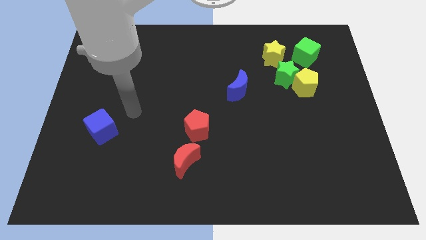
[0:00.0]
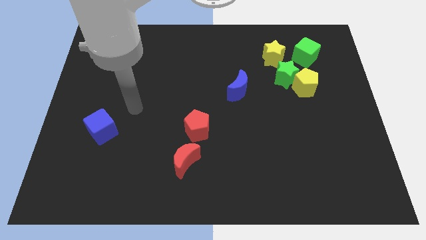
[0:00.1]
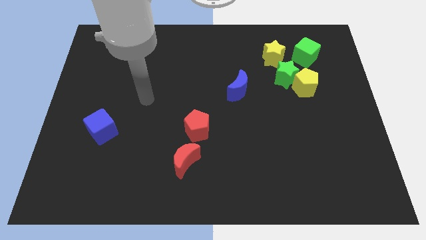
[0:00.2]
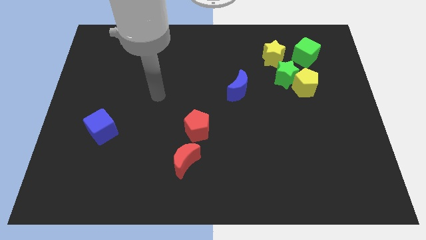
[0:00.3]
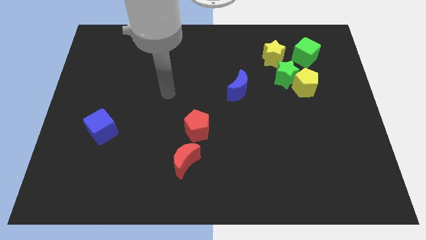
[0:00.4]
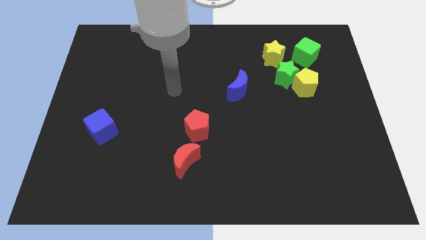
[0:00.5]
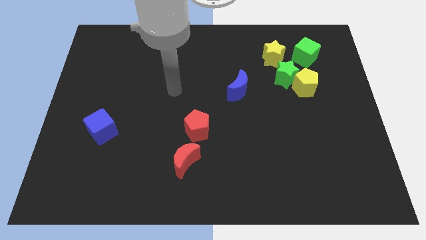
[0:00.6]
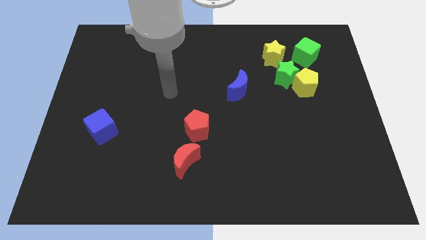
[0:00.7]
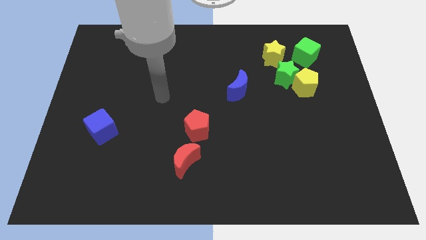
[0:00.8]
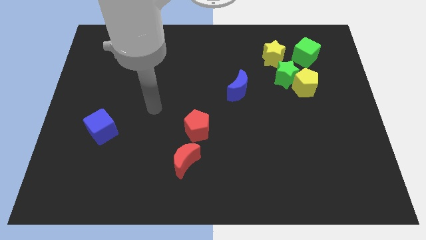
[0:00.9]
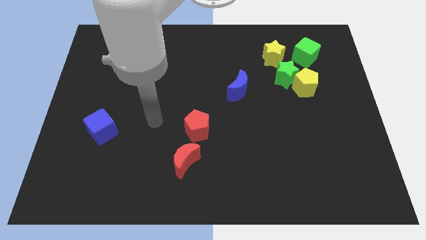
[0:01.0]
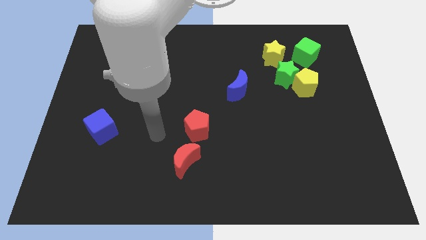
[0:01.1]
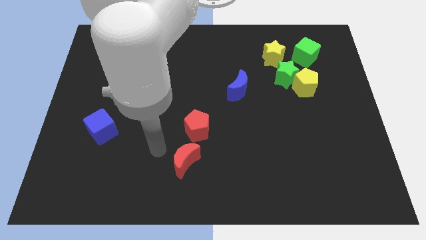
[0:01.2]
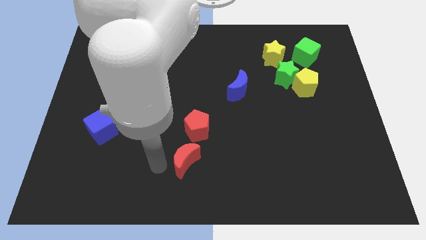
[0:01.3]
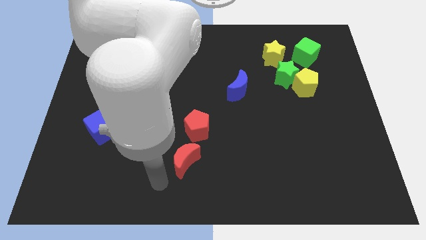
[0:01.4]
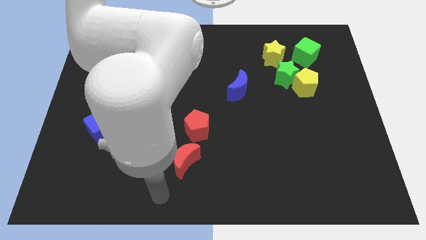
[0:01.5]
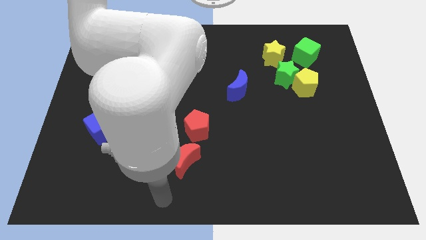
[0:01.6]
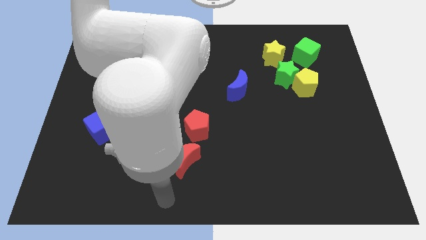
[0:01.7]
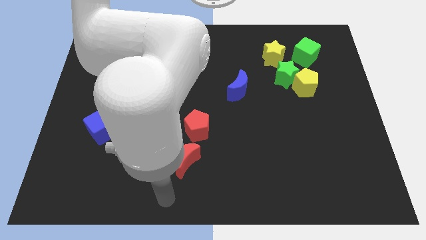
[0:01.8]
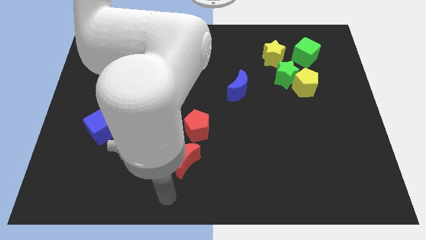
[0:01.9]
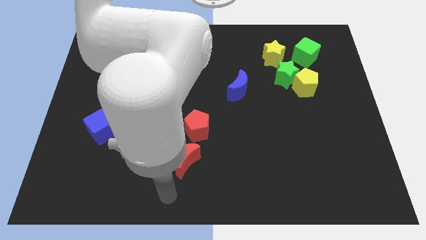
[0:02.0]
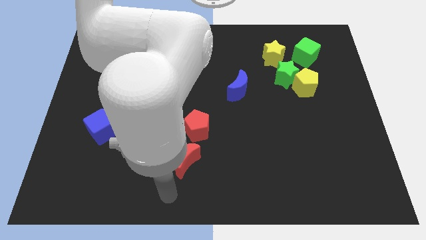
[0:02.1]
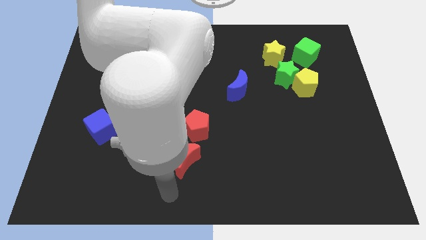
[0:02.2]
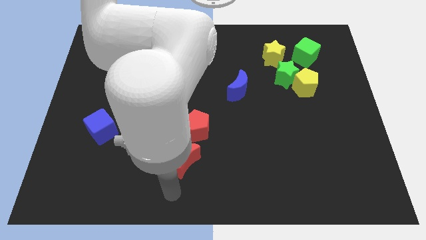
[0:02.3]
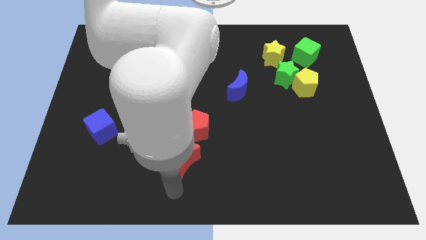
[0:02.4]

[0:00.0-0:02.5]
place your arm below the red crescent

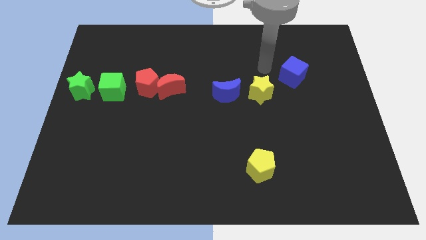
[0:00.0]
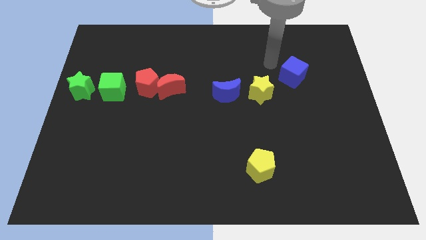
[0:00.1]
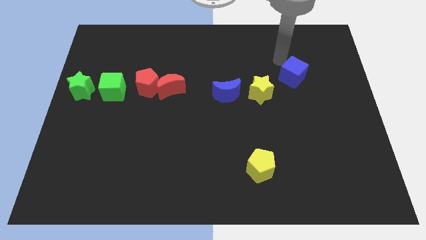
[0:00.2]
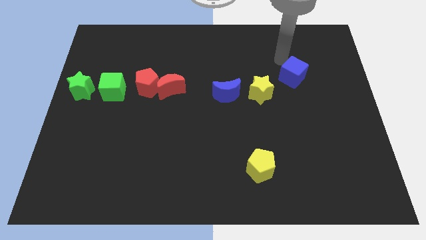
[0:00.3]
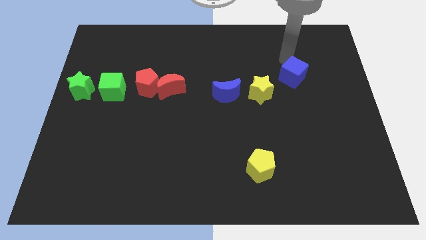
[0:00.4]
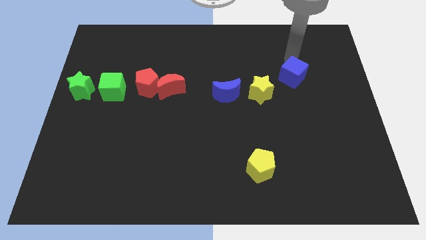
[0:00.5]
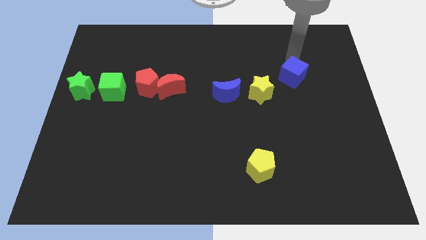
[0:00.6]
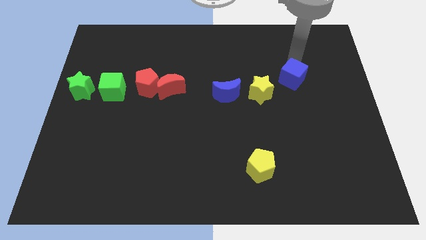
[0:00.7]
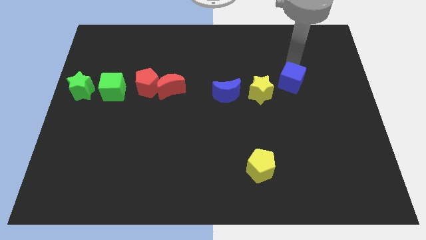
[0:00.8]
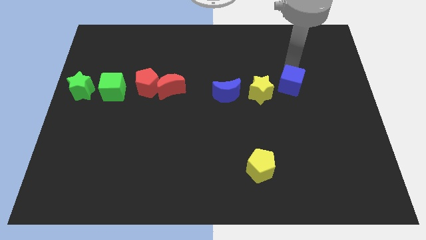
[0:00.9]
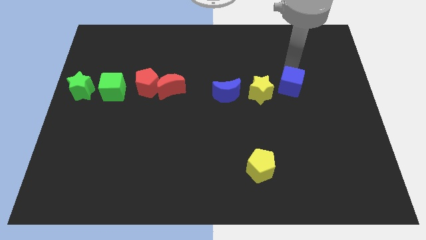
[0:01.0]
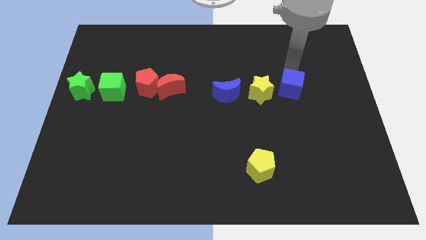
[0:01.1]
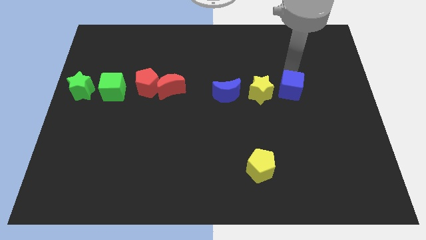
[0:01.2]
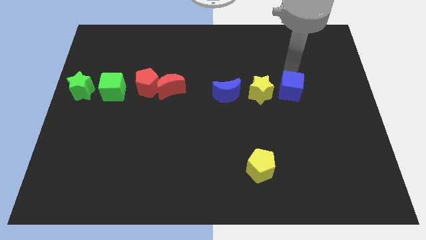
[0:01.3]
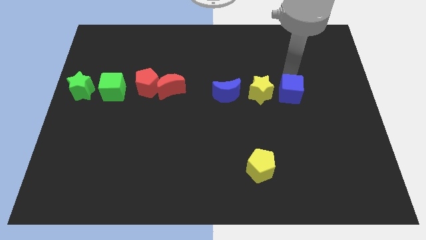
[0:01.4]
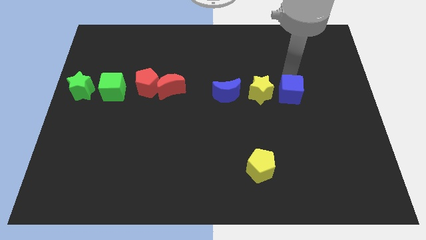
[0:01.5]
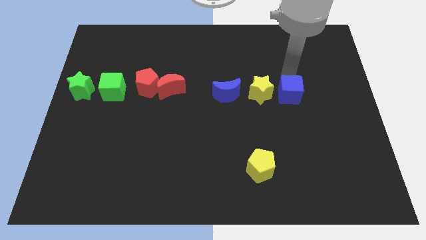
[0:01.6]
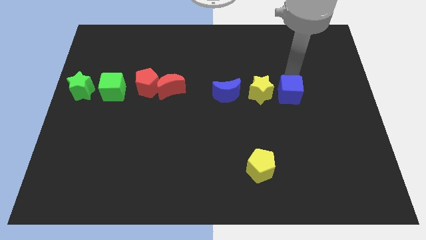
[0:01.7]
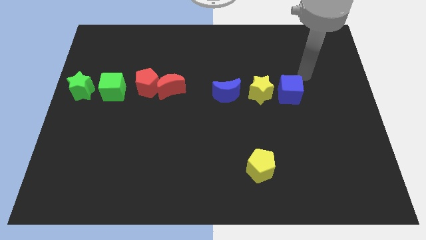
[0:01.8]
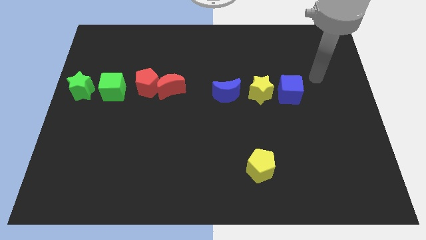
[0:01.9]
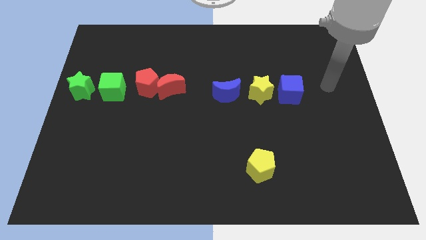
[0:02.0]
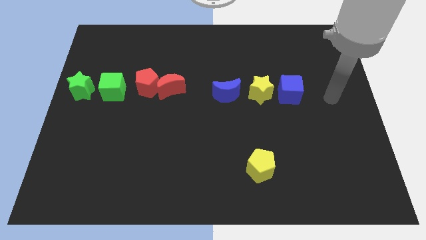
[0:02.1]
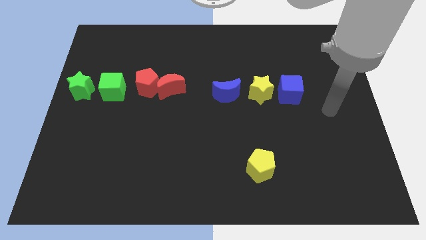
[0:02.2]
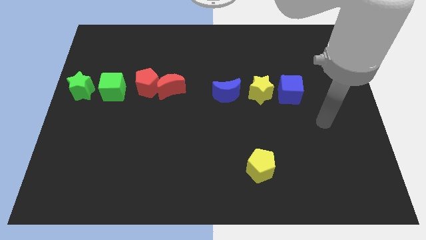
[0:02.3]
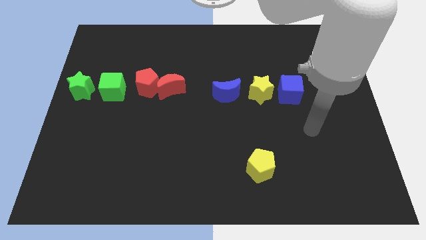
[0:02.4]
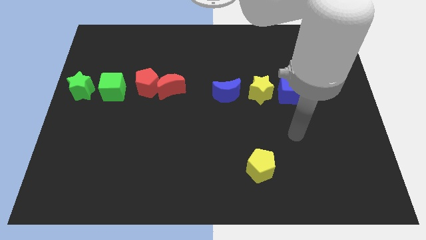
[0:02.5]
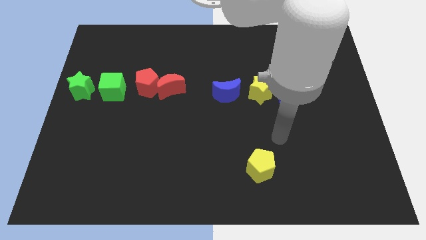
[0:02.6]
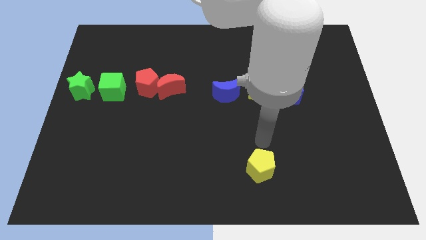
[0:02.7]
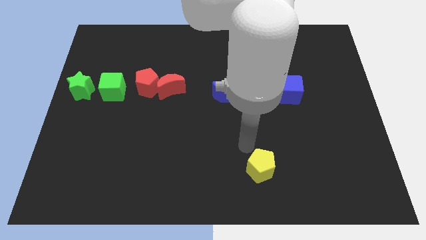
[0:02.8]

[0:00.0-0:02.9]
push the blue cube to the right of the yellow star

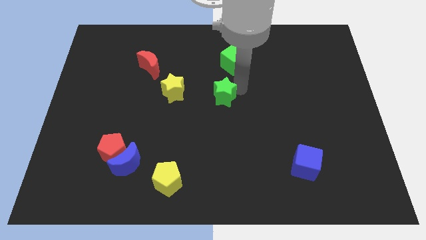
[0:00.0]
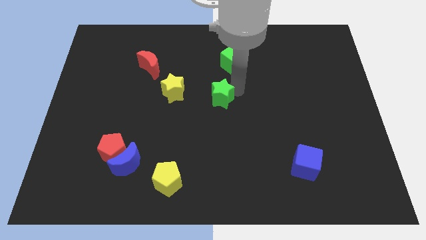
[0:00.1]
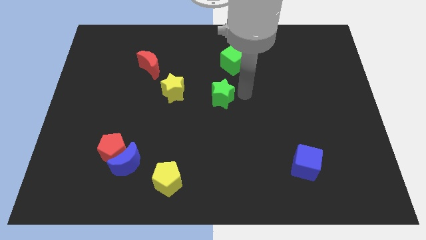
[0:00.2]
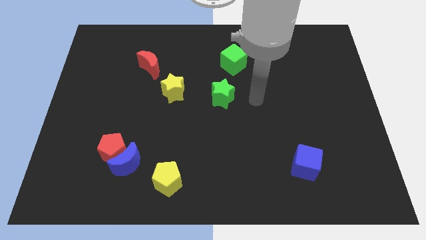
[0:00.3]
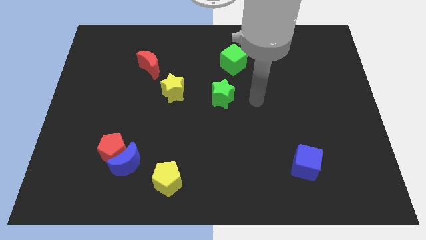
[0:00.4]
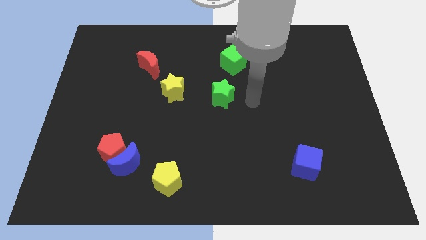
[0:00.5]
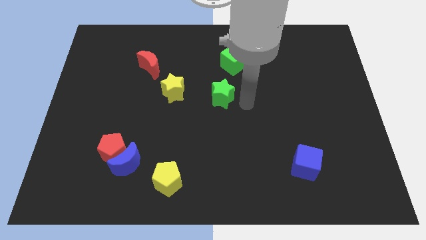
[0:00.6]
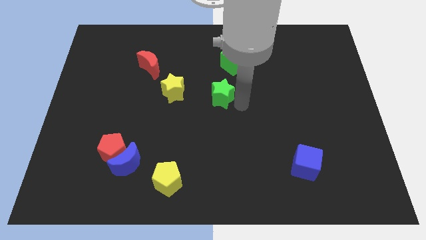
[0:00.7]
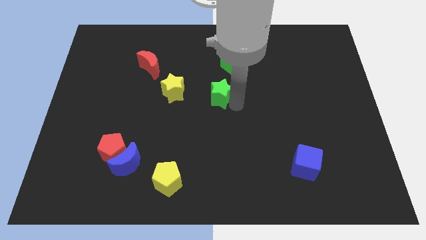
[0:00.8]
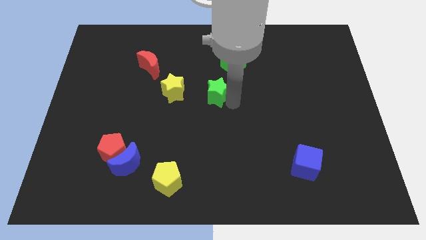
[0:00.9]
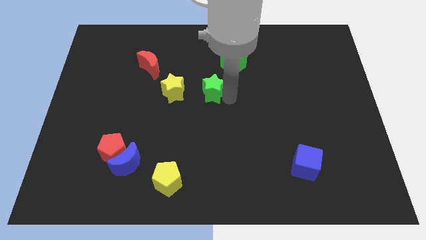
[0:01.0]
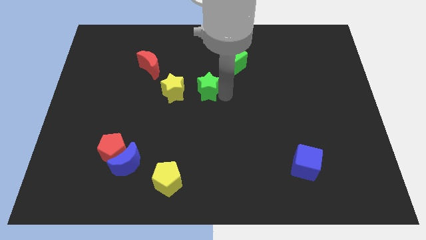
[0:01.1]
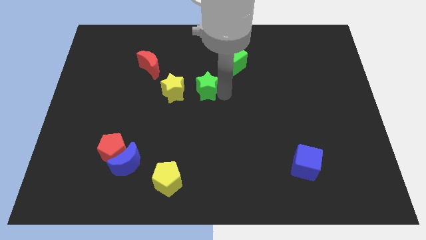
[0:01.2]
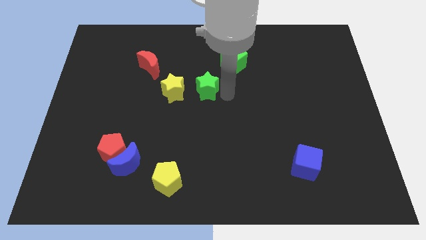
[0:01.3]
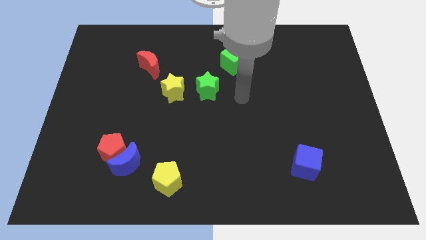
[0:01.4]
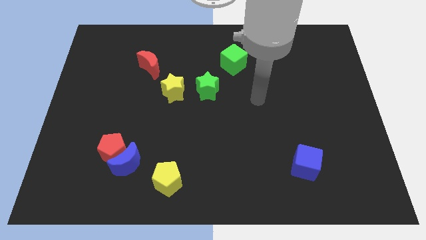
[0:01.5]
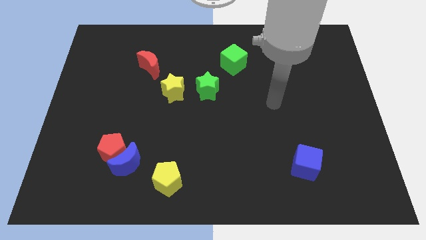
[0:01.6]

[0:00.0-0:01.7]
move green star to the right of yellow star

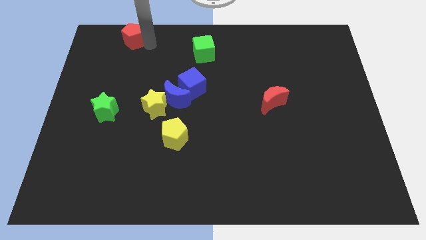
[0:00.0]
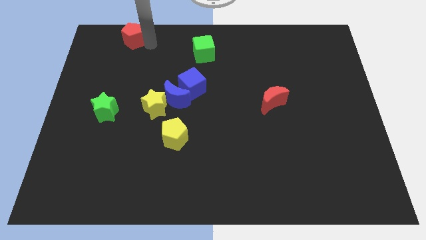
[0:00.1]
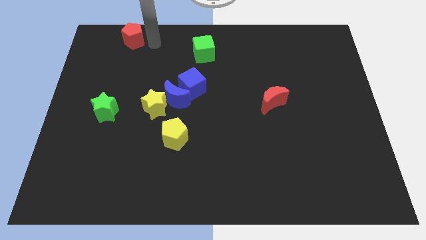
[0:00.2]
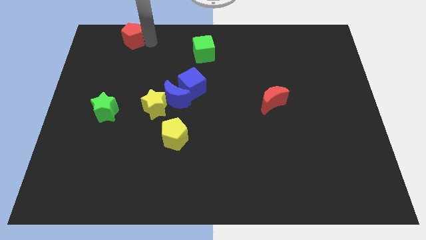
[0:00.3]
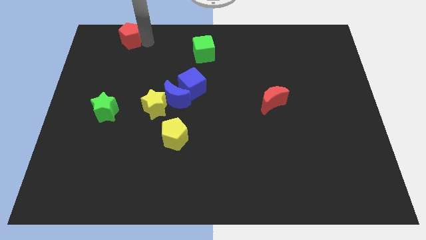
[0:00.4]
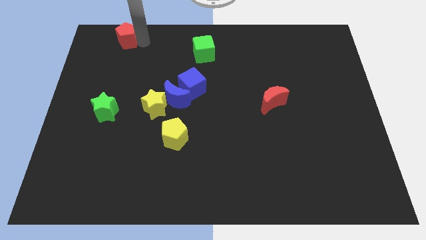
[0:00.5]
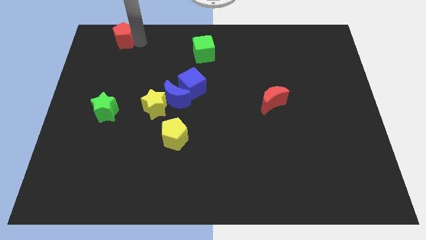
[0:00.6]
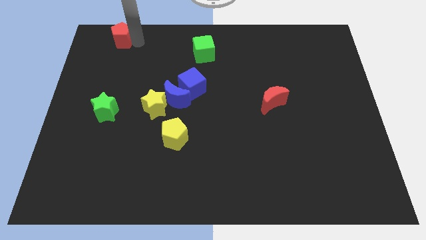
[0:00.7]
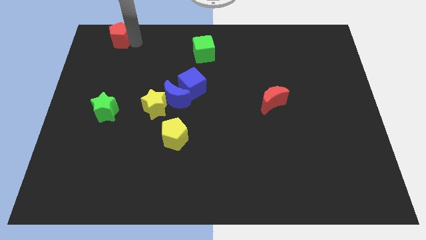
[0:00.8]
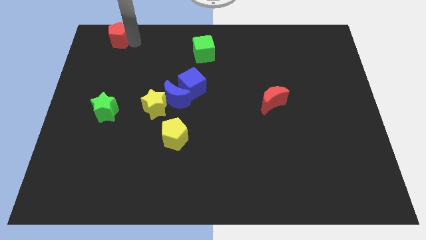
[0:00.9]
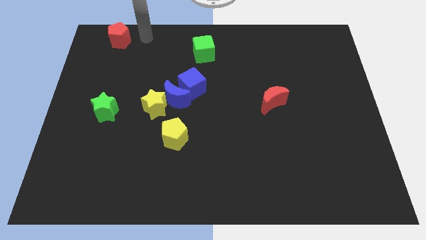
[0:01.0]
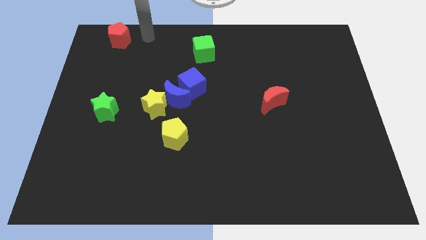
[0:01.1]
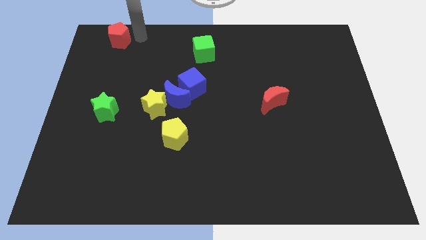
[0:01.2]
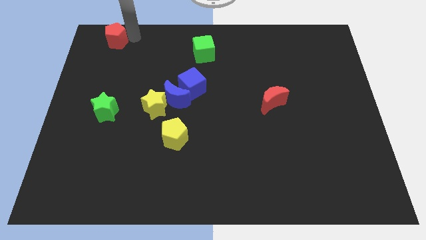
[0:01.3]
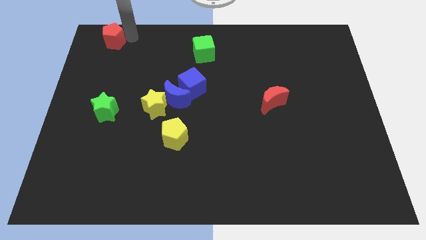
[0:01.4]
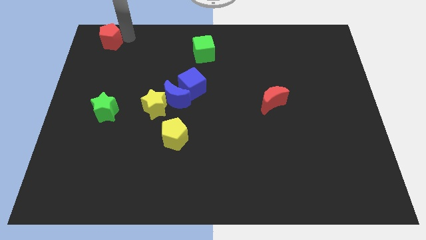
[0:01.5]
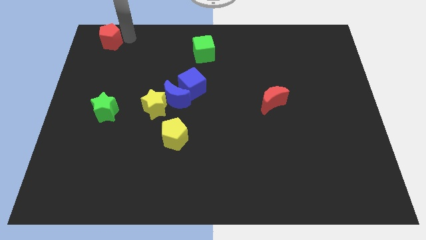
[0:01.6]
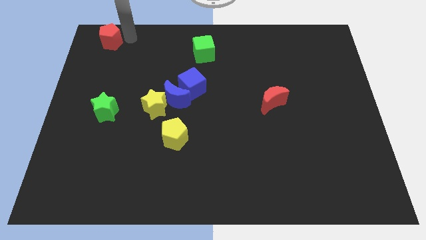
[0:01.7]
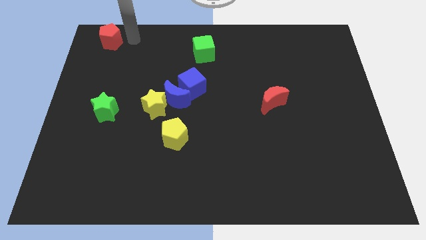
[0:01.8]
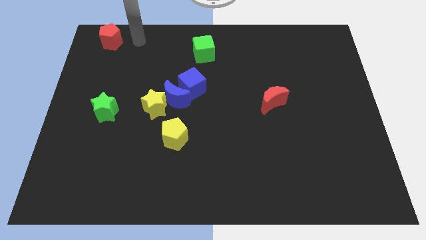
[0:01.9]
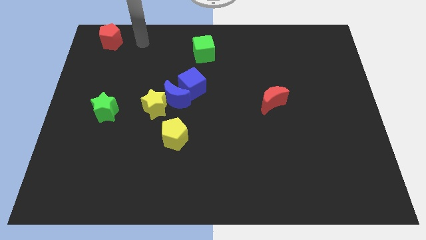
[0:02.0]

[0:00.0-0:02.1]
move the red pentagon towards top left side of the board
